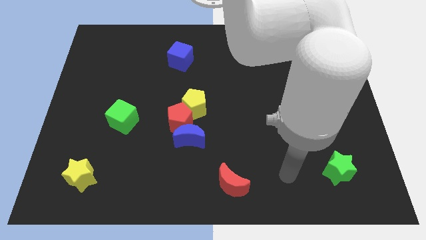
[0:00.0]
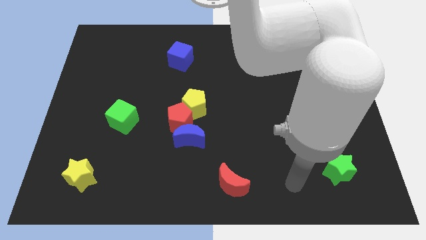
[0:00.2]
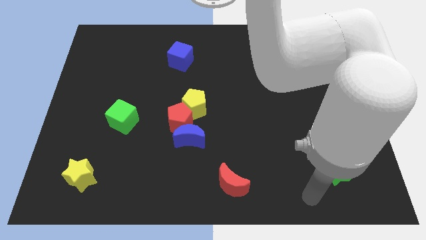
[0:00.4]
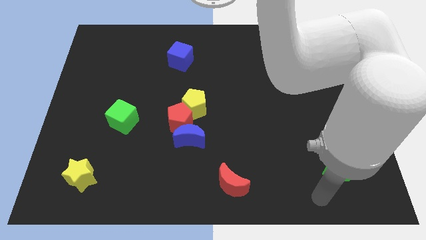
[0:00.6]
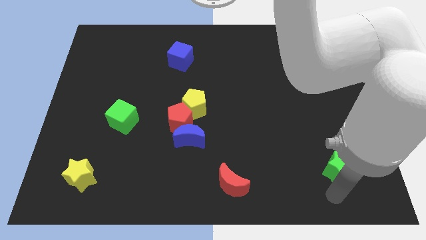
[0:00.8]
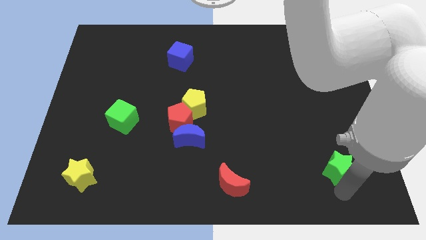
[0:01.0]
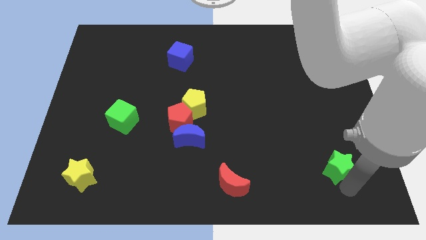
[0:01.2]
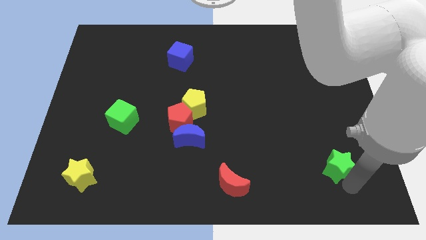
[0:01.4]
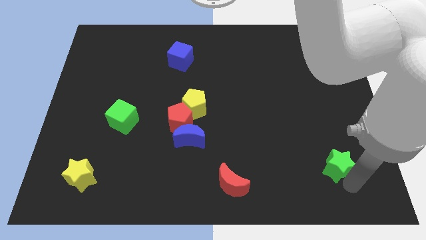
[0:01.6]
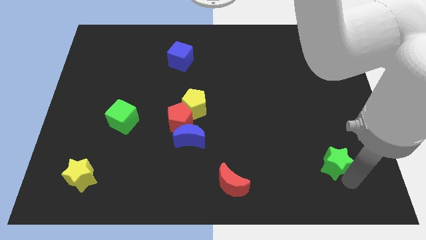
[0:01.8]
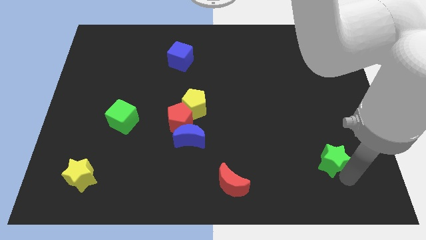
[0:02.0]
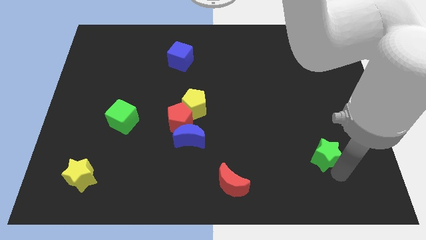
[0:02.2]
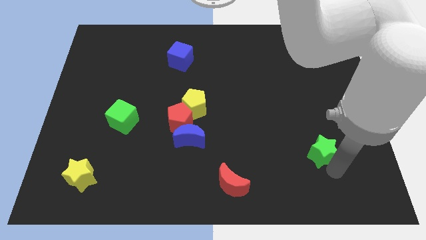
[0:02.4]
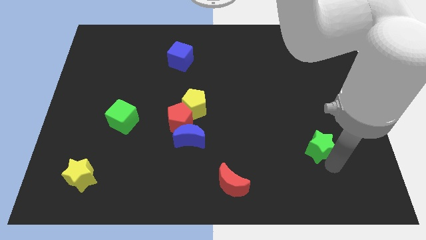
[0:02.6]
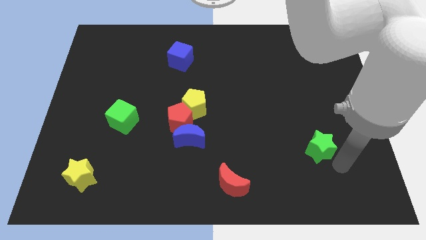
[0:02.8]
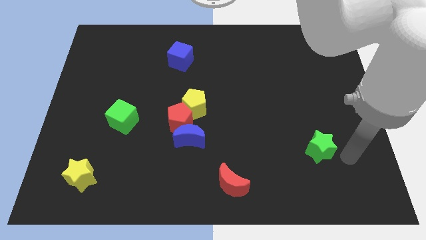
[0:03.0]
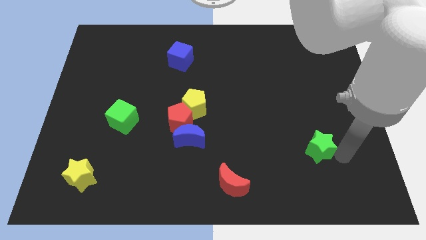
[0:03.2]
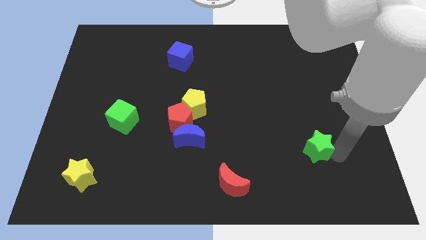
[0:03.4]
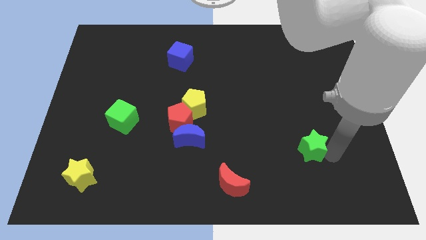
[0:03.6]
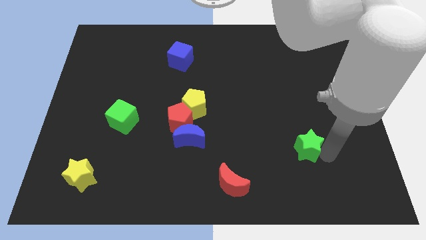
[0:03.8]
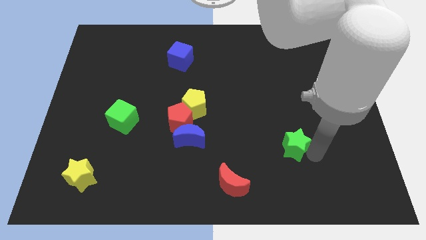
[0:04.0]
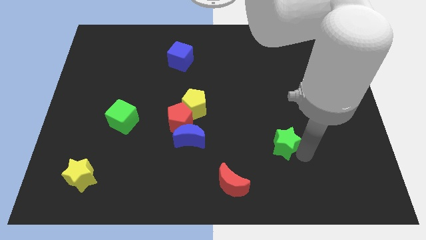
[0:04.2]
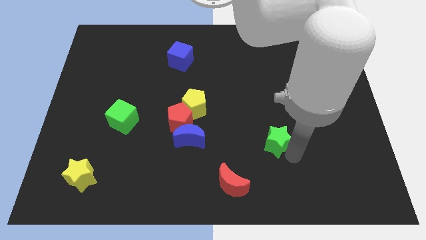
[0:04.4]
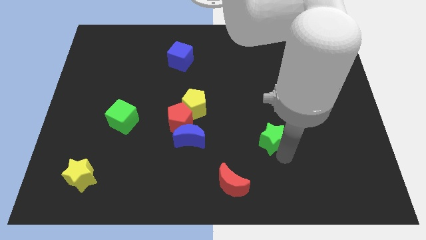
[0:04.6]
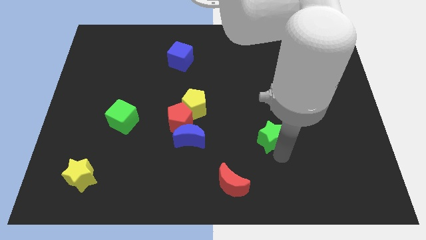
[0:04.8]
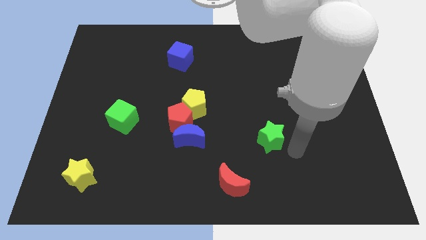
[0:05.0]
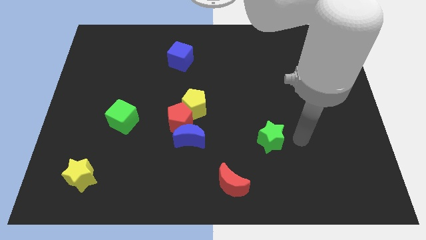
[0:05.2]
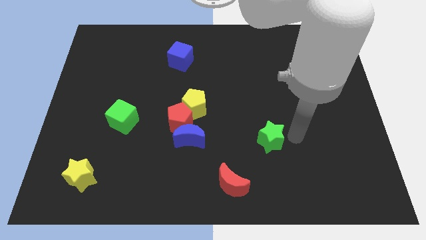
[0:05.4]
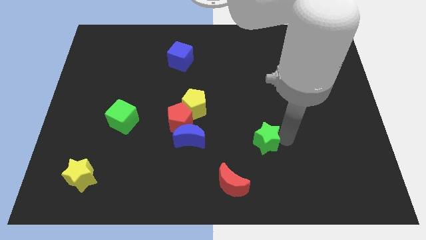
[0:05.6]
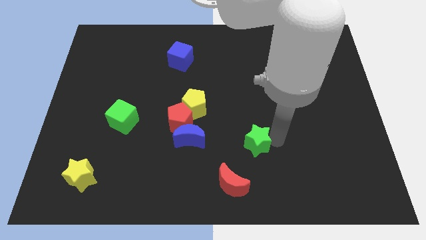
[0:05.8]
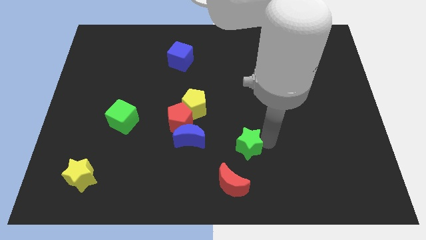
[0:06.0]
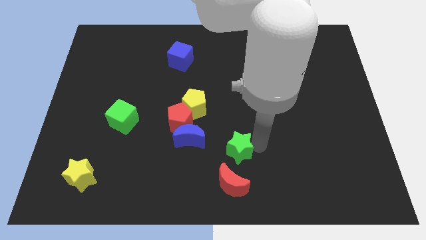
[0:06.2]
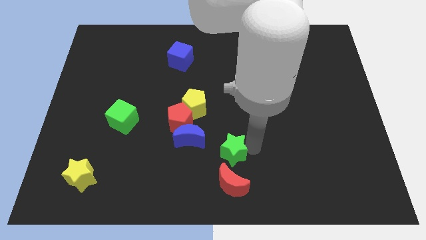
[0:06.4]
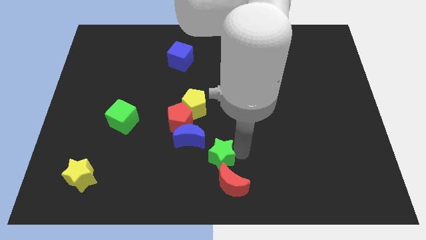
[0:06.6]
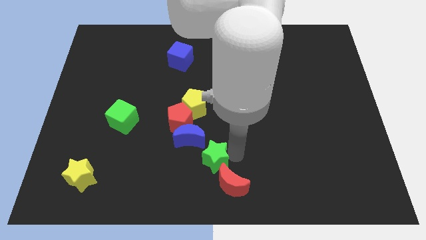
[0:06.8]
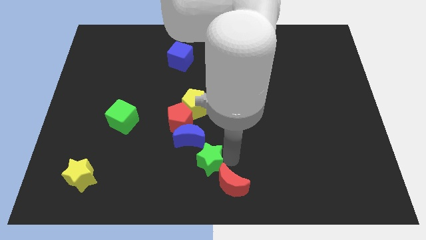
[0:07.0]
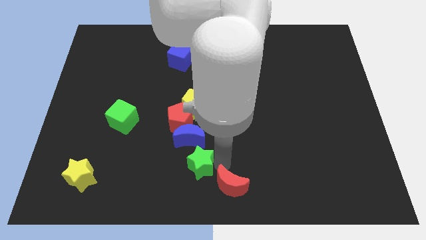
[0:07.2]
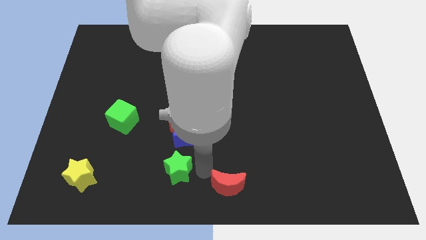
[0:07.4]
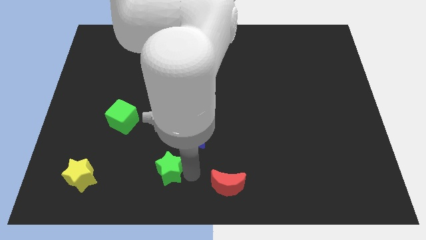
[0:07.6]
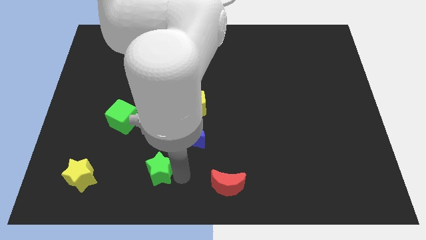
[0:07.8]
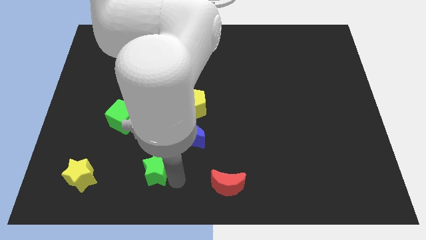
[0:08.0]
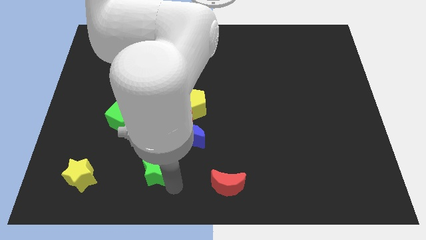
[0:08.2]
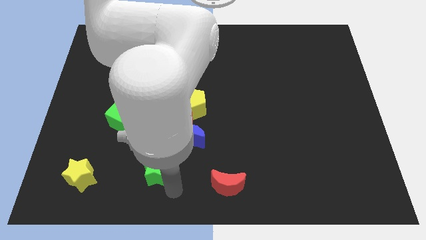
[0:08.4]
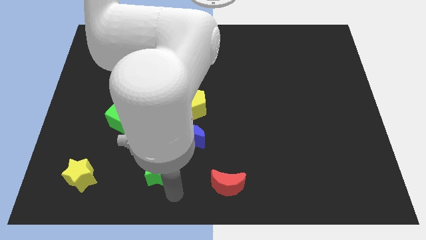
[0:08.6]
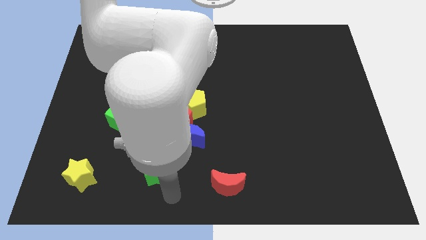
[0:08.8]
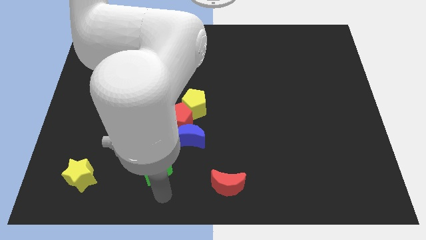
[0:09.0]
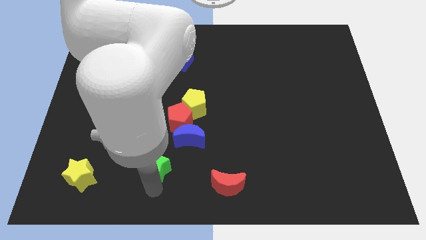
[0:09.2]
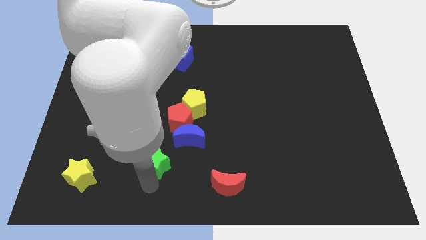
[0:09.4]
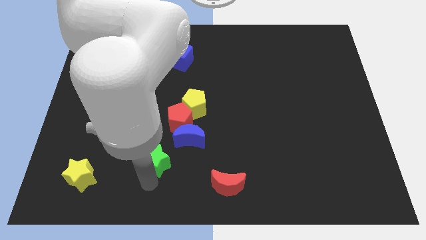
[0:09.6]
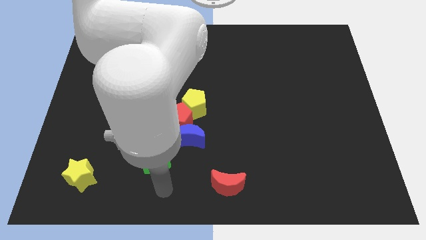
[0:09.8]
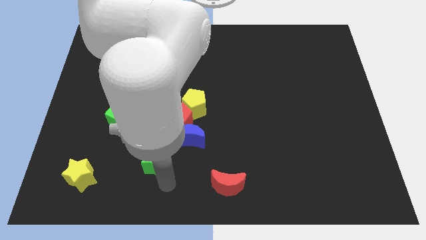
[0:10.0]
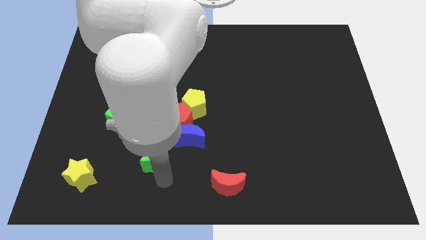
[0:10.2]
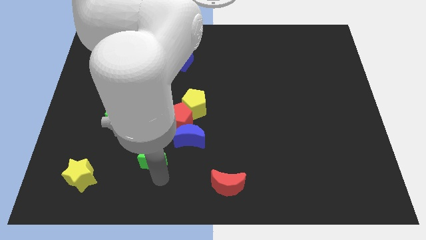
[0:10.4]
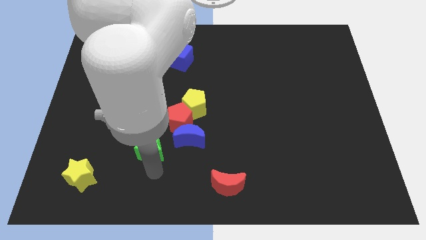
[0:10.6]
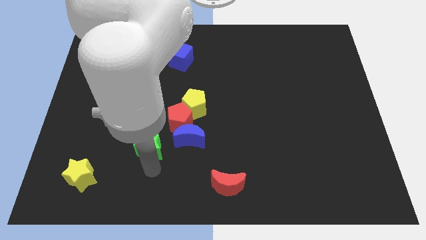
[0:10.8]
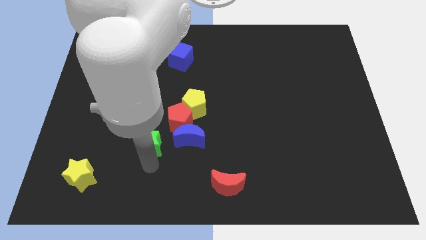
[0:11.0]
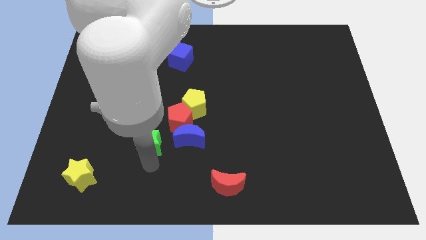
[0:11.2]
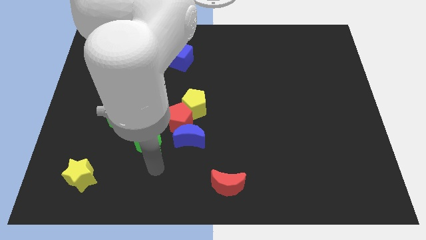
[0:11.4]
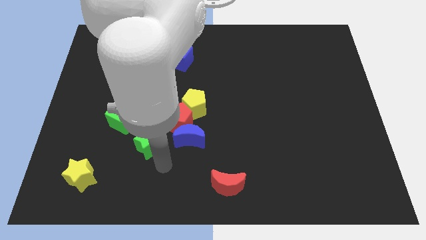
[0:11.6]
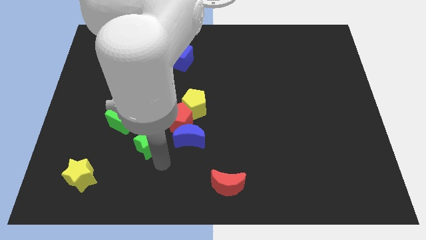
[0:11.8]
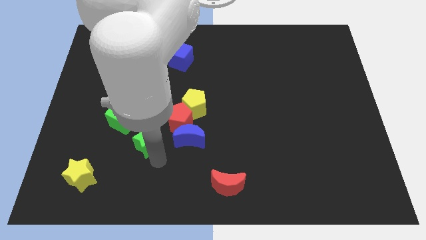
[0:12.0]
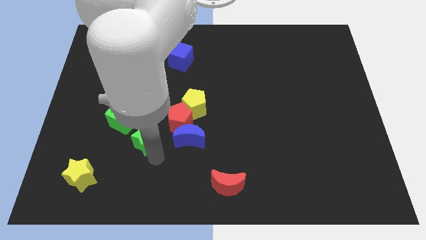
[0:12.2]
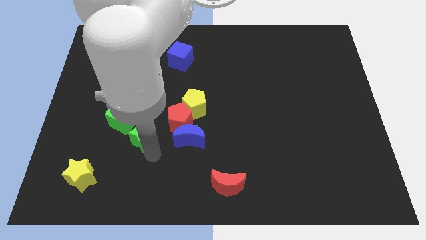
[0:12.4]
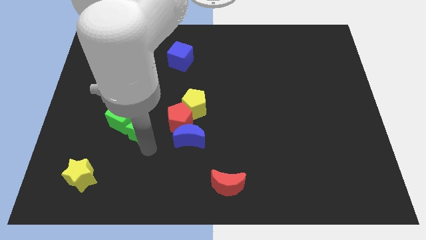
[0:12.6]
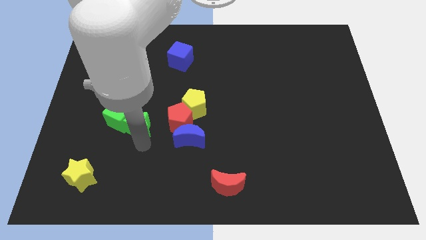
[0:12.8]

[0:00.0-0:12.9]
move the green star close to the green cube

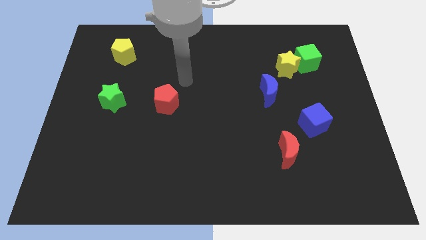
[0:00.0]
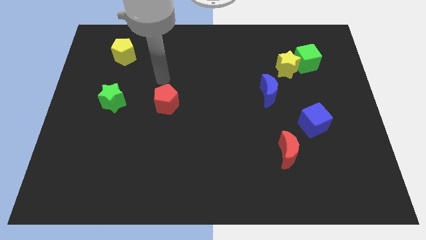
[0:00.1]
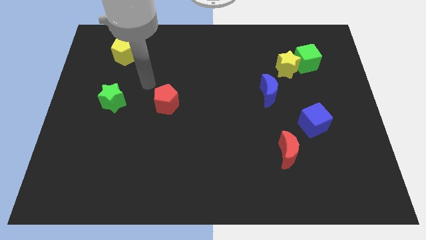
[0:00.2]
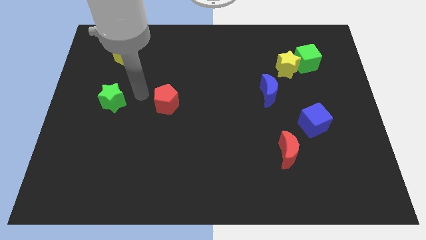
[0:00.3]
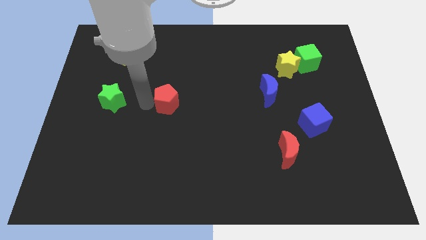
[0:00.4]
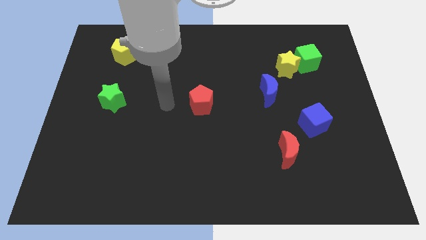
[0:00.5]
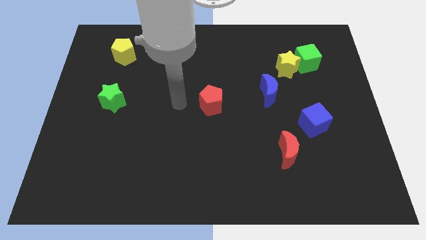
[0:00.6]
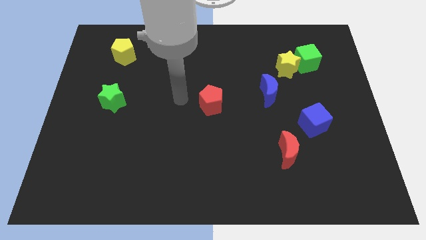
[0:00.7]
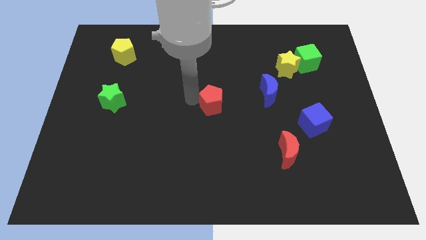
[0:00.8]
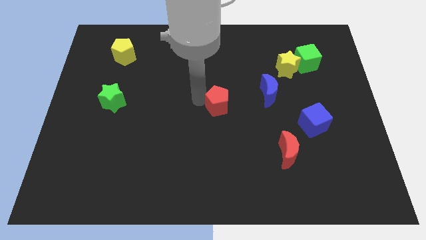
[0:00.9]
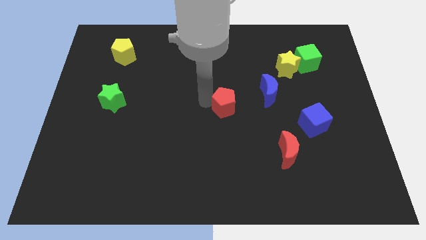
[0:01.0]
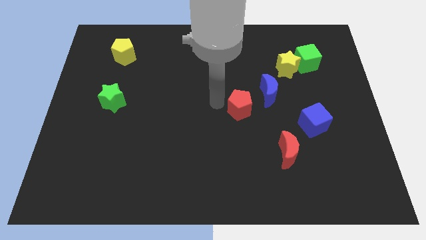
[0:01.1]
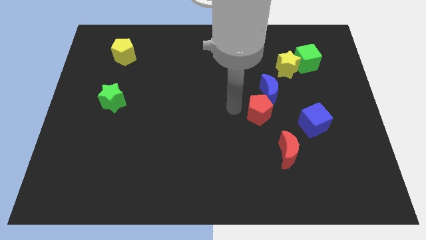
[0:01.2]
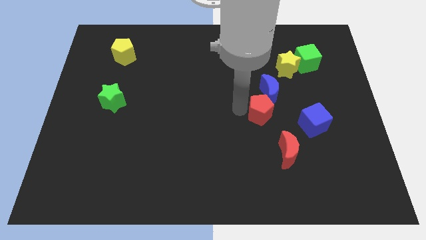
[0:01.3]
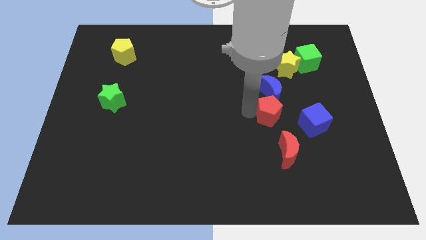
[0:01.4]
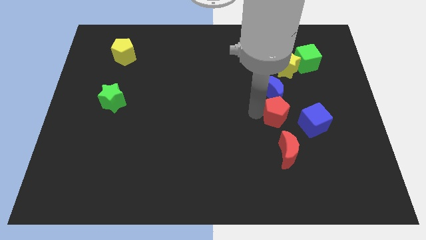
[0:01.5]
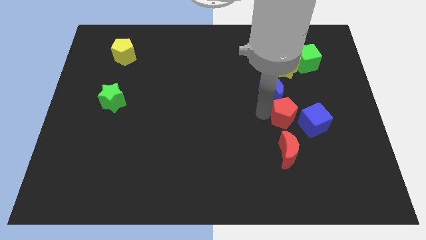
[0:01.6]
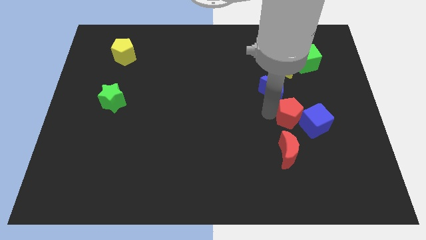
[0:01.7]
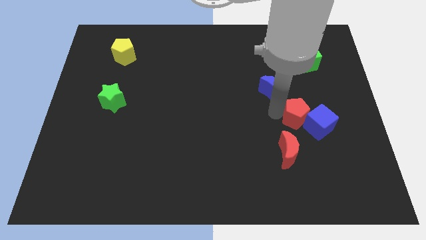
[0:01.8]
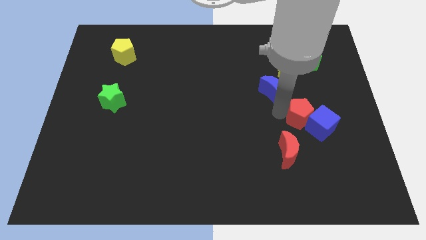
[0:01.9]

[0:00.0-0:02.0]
push the red pentagon towards the blue cube
